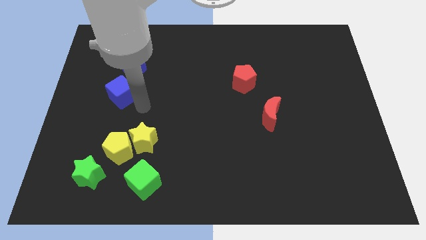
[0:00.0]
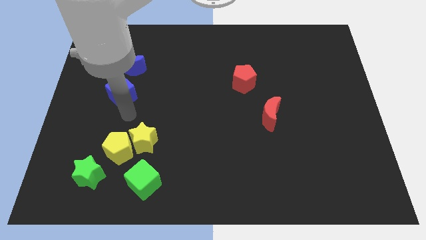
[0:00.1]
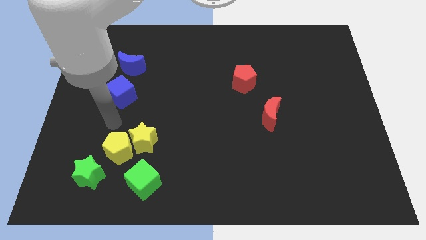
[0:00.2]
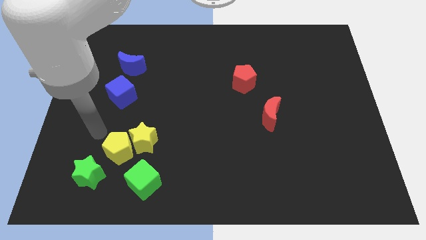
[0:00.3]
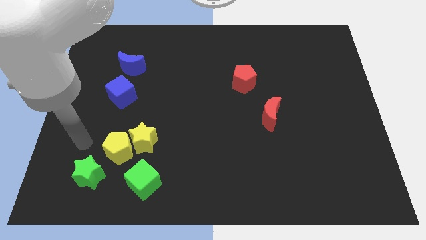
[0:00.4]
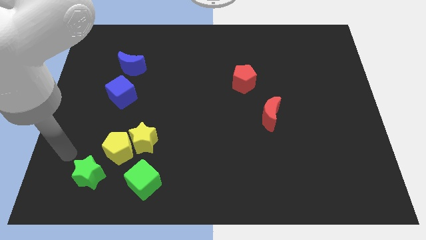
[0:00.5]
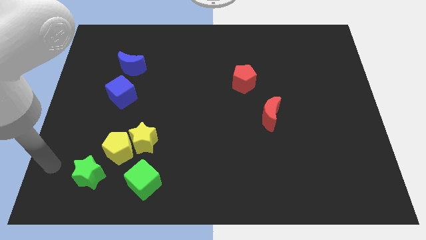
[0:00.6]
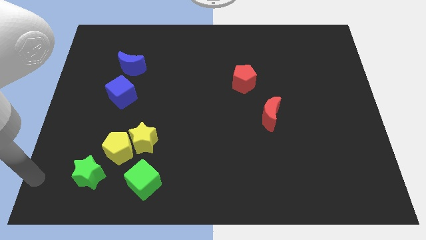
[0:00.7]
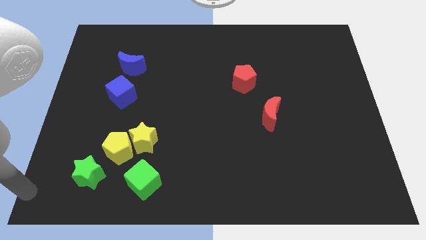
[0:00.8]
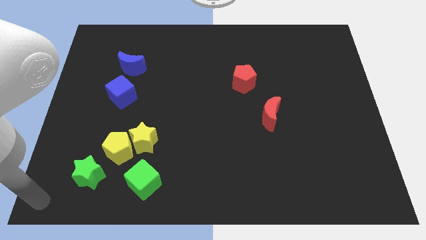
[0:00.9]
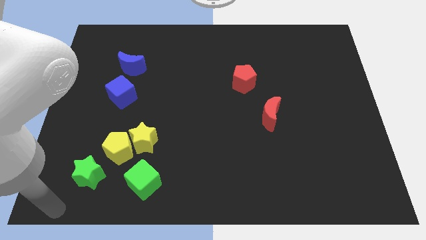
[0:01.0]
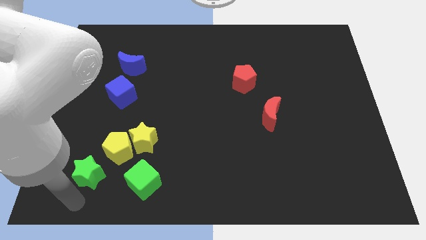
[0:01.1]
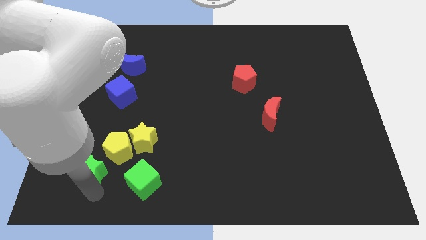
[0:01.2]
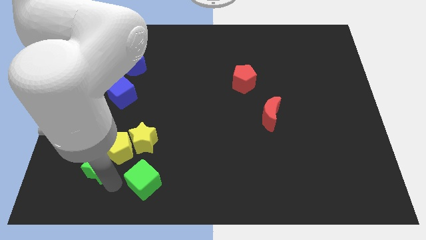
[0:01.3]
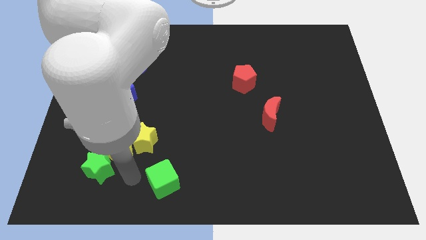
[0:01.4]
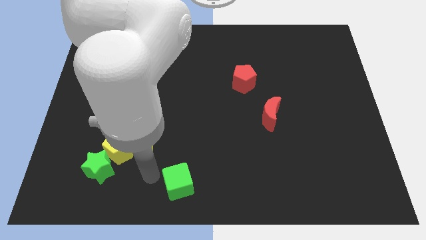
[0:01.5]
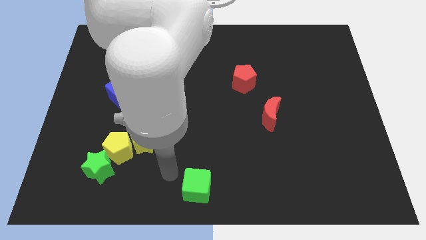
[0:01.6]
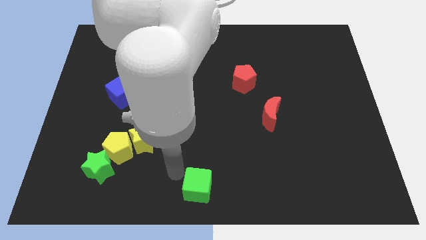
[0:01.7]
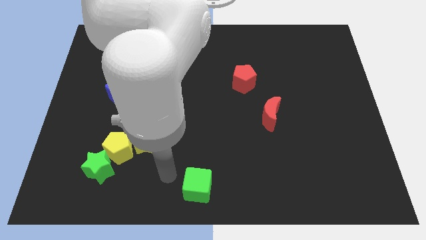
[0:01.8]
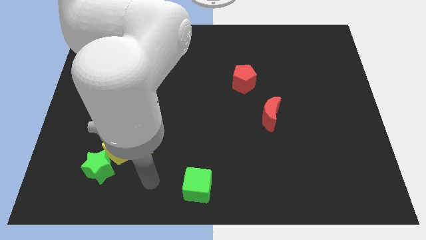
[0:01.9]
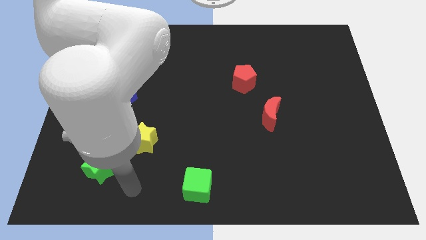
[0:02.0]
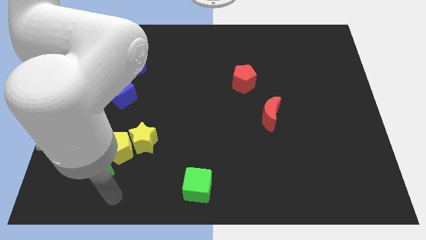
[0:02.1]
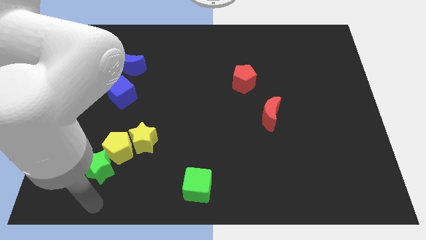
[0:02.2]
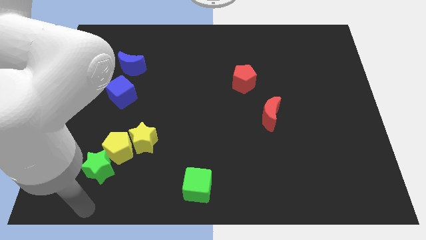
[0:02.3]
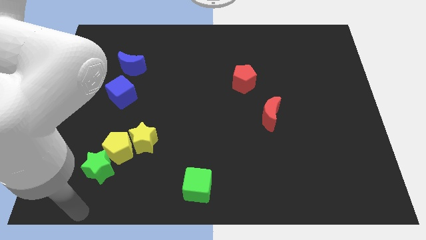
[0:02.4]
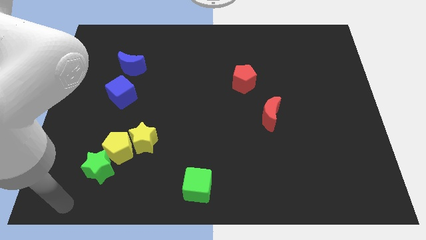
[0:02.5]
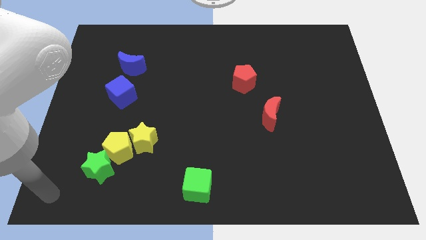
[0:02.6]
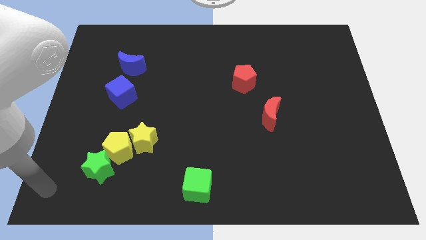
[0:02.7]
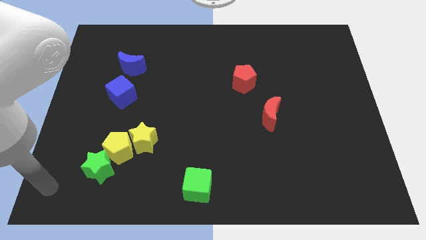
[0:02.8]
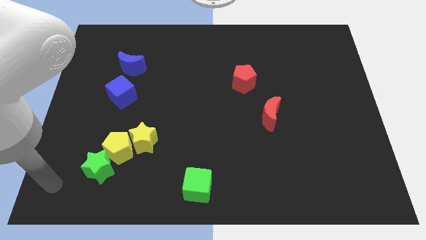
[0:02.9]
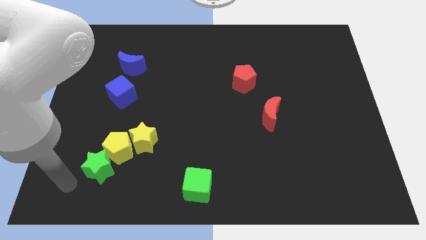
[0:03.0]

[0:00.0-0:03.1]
separate green star and green cube

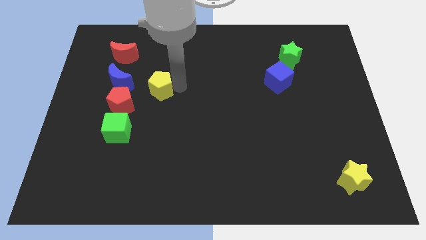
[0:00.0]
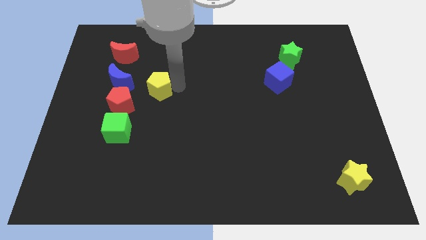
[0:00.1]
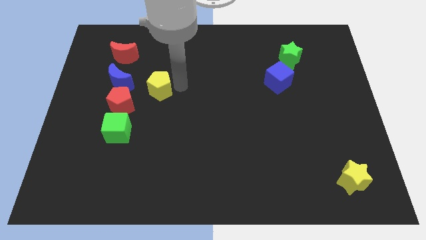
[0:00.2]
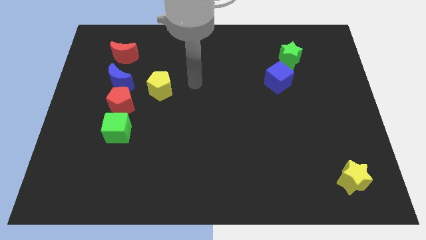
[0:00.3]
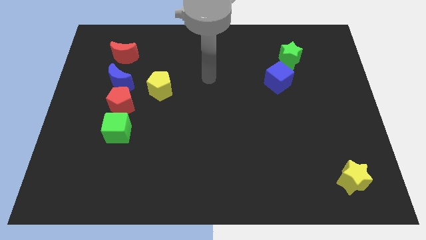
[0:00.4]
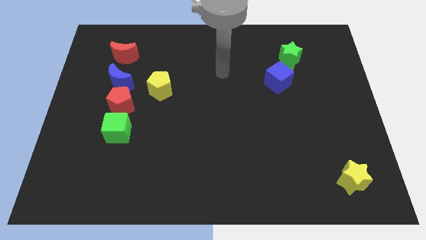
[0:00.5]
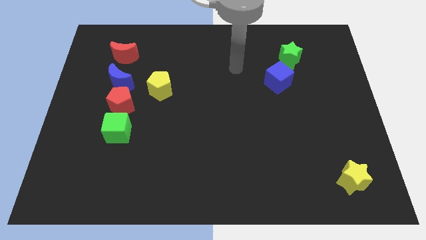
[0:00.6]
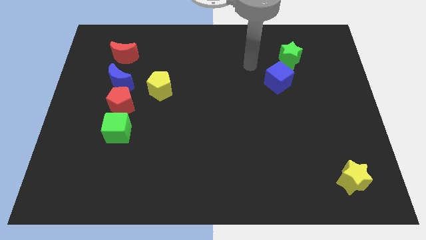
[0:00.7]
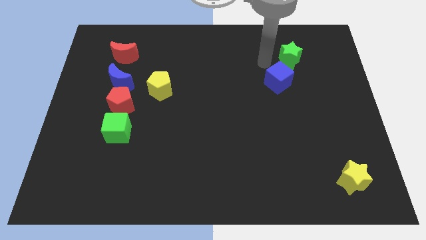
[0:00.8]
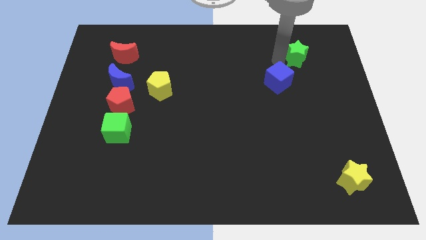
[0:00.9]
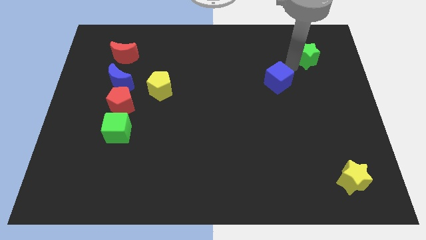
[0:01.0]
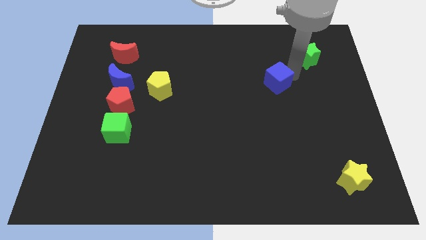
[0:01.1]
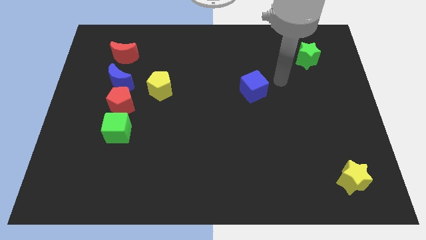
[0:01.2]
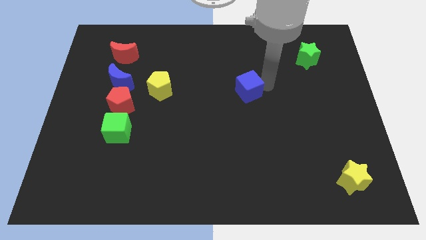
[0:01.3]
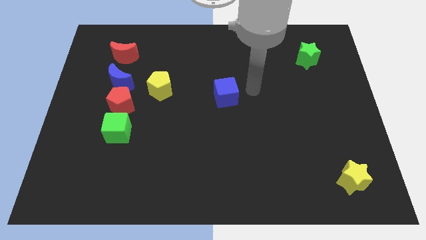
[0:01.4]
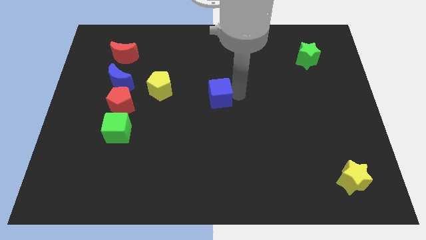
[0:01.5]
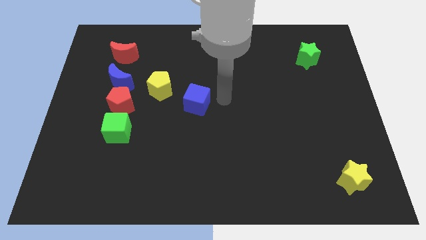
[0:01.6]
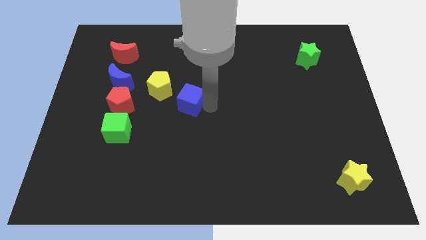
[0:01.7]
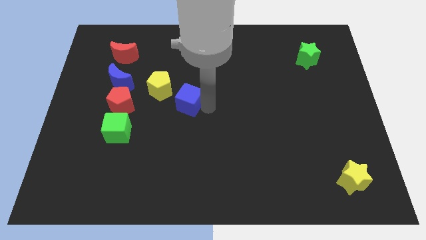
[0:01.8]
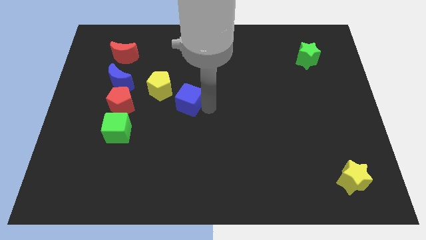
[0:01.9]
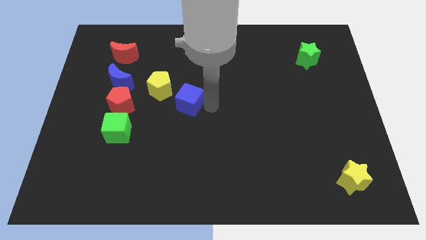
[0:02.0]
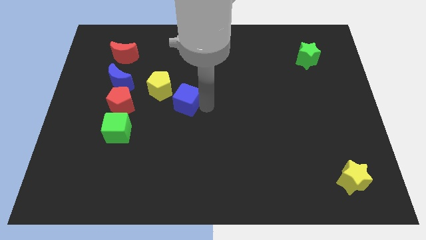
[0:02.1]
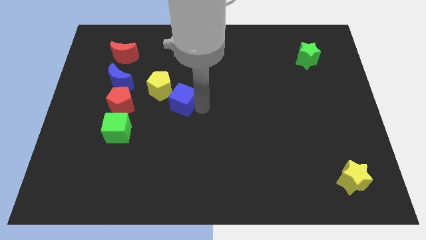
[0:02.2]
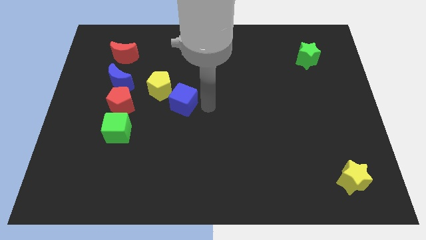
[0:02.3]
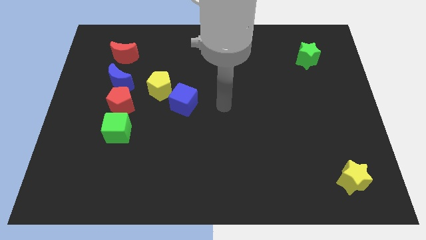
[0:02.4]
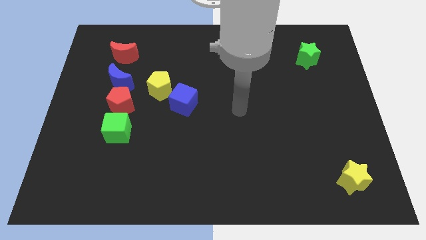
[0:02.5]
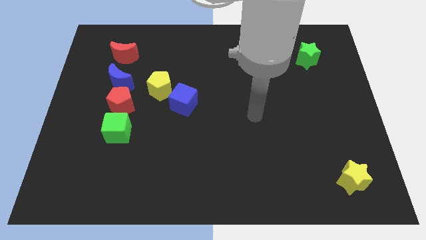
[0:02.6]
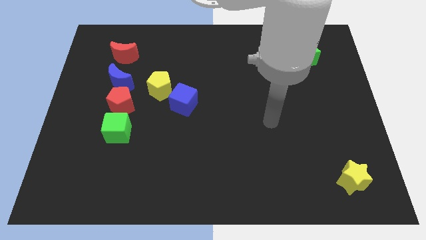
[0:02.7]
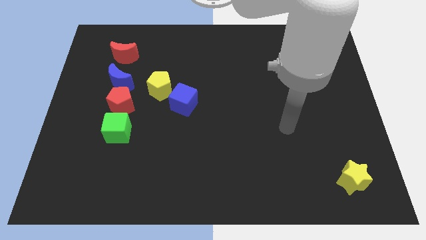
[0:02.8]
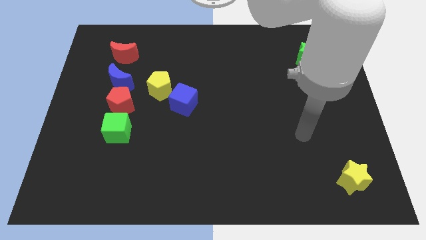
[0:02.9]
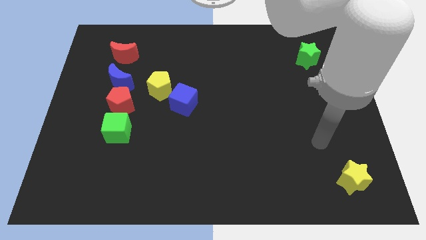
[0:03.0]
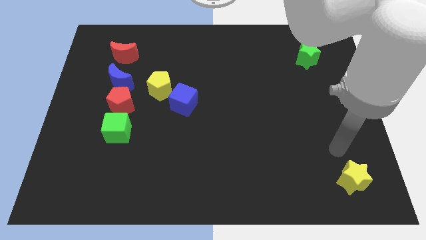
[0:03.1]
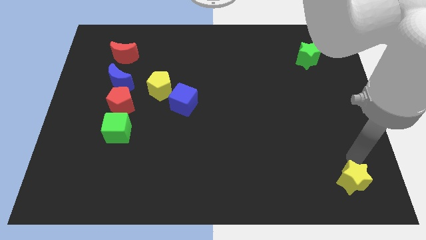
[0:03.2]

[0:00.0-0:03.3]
separate the blue cube from the green star

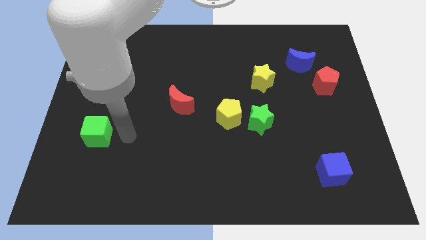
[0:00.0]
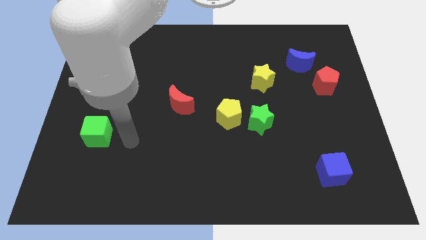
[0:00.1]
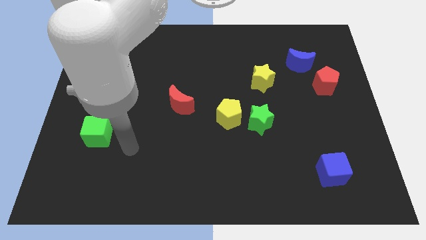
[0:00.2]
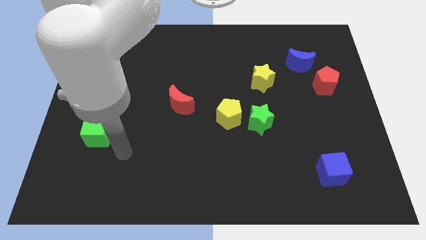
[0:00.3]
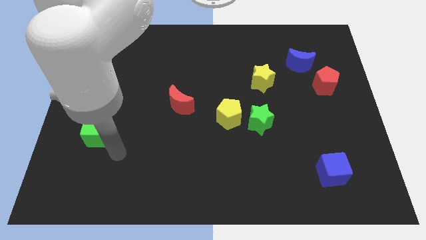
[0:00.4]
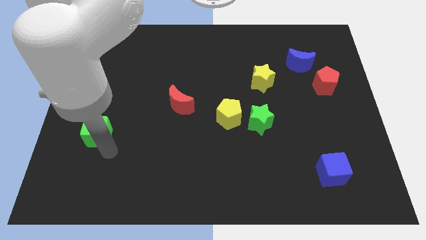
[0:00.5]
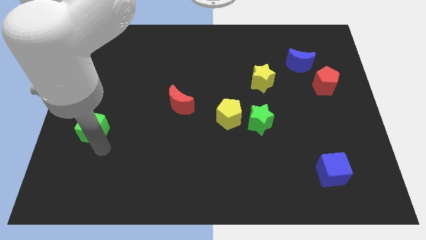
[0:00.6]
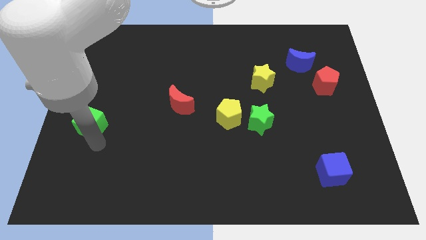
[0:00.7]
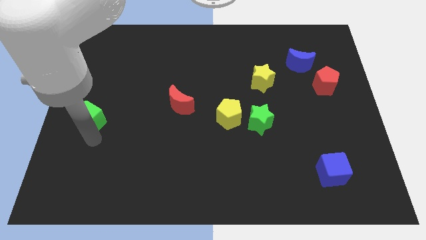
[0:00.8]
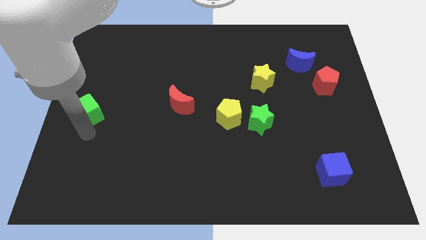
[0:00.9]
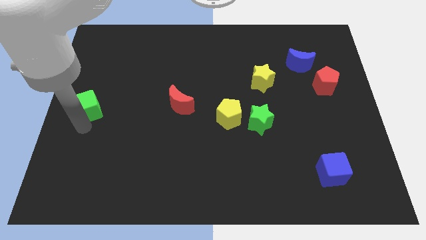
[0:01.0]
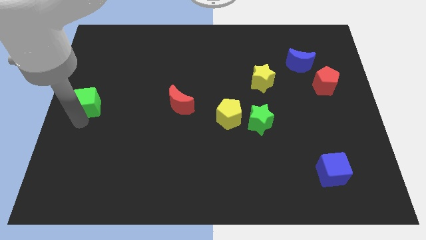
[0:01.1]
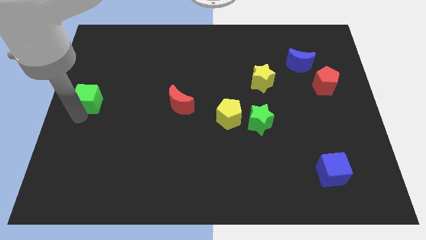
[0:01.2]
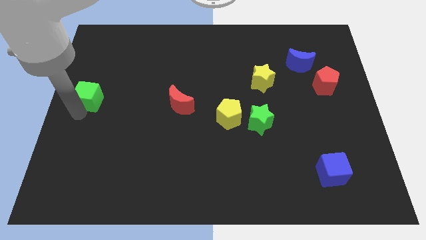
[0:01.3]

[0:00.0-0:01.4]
move the green cube parallel to the left of the red moon

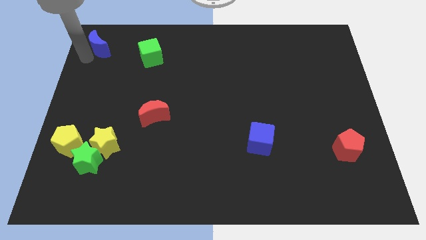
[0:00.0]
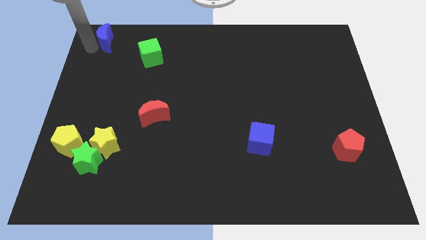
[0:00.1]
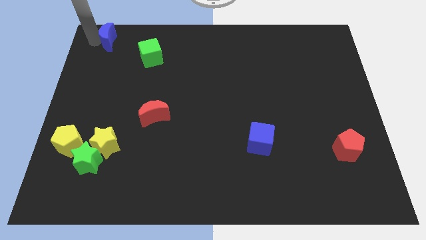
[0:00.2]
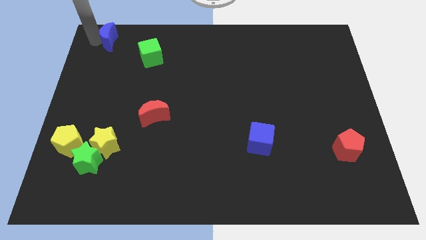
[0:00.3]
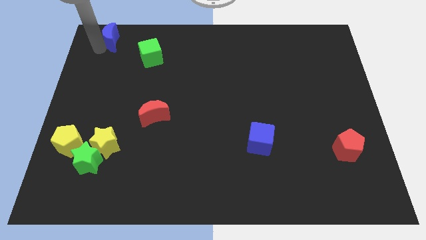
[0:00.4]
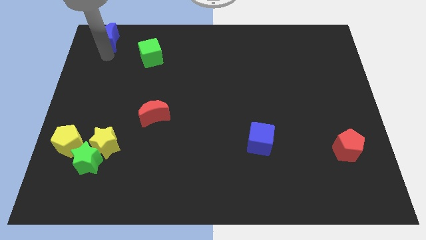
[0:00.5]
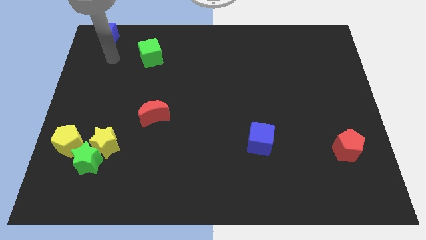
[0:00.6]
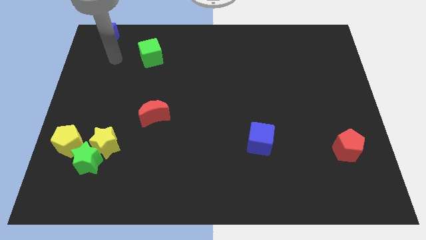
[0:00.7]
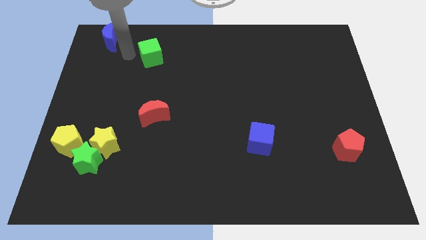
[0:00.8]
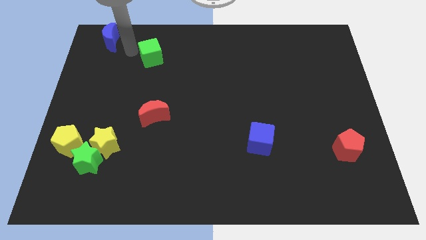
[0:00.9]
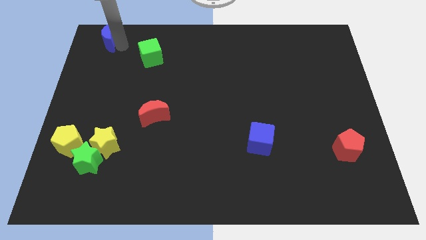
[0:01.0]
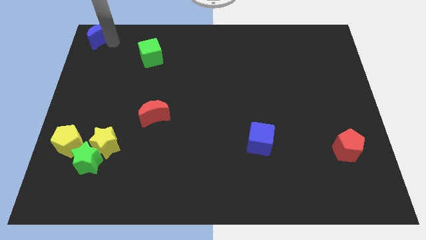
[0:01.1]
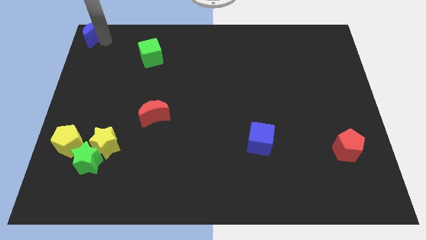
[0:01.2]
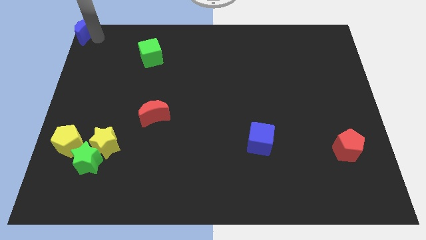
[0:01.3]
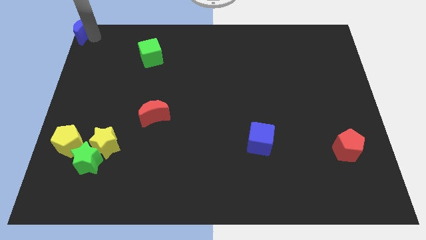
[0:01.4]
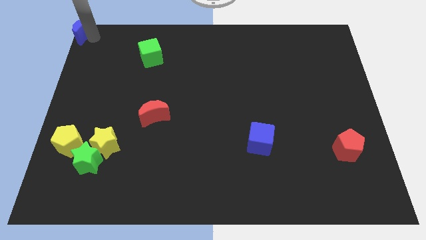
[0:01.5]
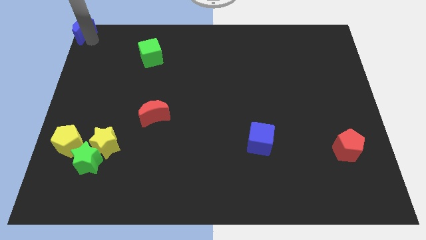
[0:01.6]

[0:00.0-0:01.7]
move the blue crescent to the top left corner of the board
